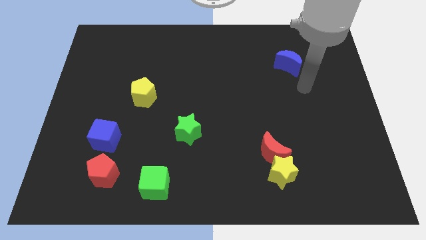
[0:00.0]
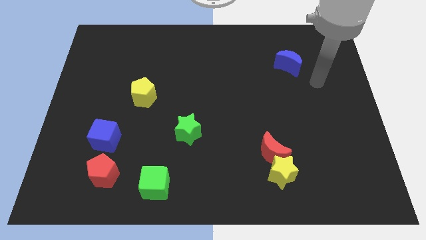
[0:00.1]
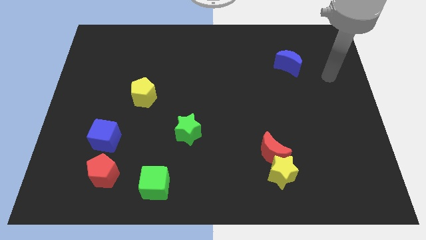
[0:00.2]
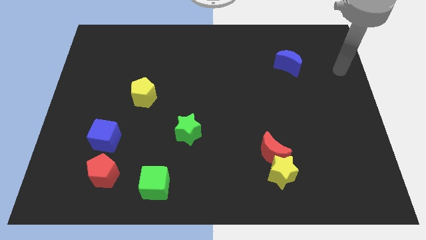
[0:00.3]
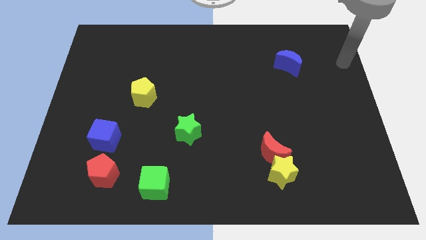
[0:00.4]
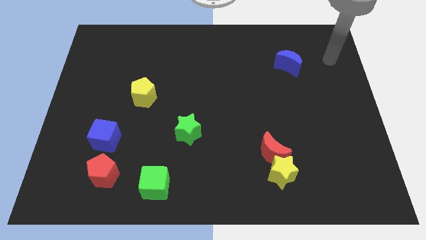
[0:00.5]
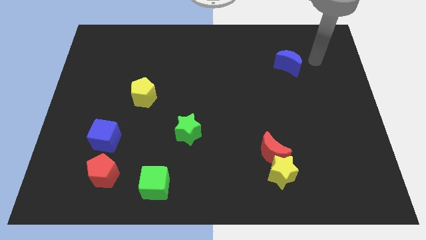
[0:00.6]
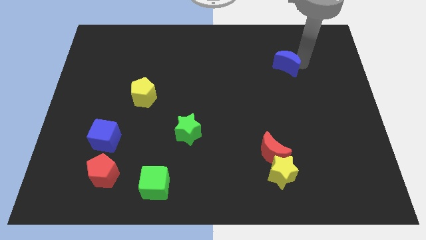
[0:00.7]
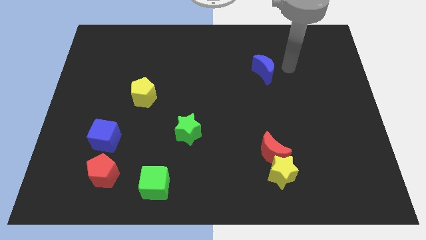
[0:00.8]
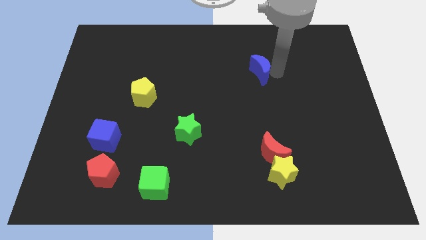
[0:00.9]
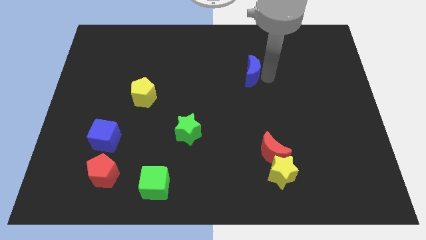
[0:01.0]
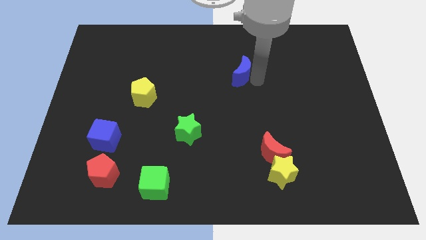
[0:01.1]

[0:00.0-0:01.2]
drag the blue crescent diagonally on the top right side of the green star

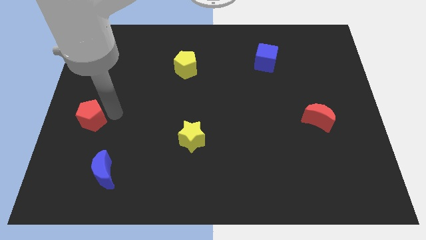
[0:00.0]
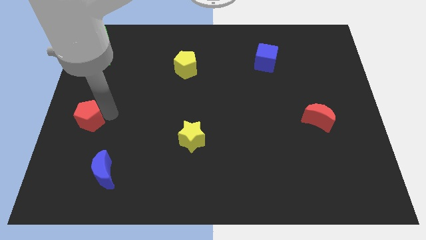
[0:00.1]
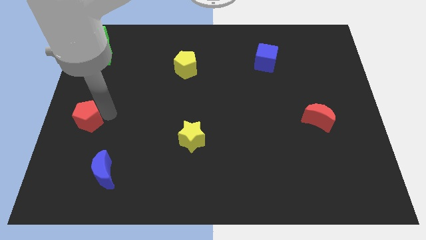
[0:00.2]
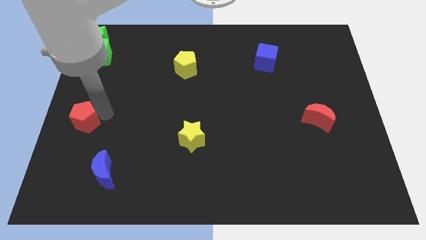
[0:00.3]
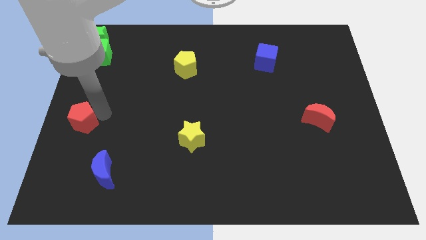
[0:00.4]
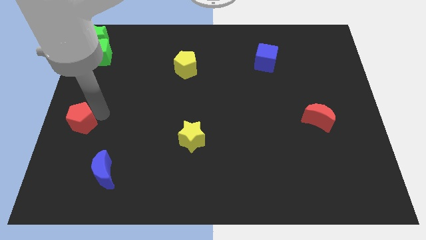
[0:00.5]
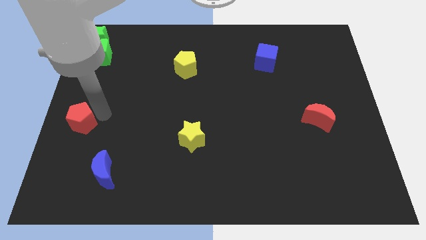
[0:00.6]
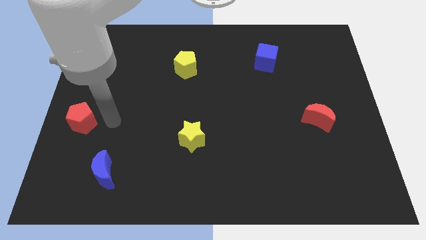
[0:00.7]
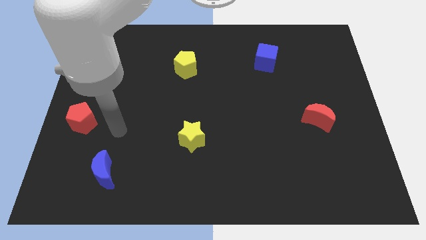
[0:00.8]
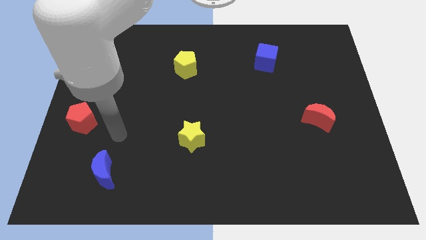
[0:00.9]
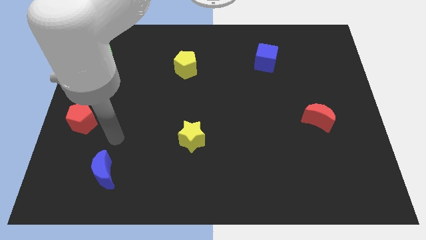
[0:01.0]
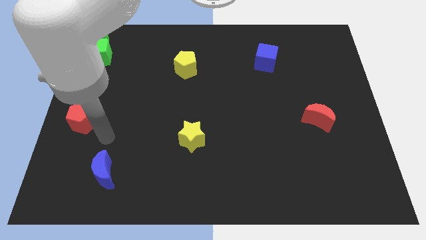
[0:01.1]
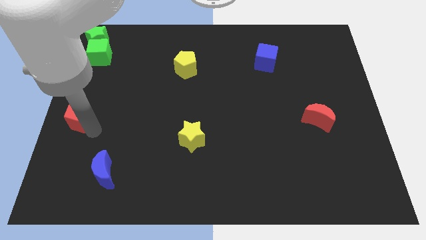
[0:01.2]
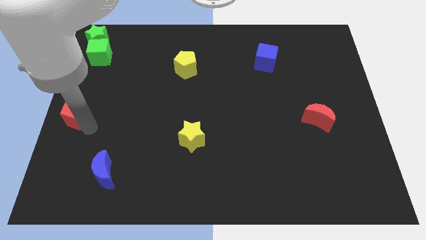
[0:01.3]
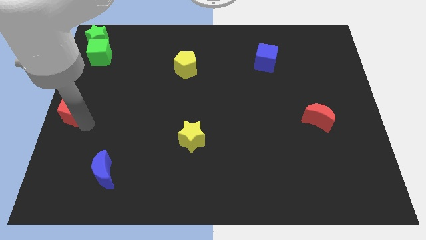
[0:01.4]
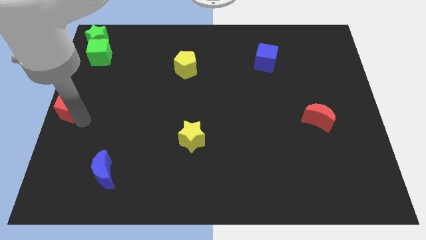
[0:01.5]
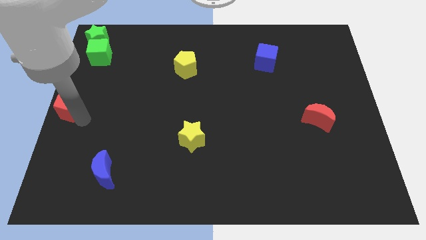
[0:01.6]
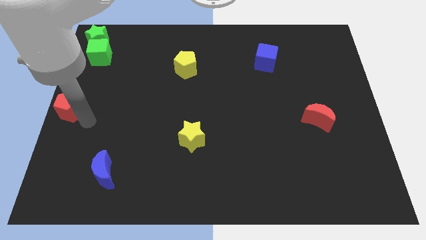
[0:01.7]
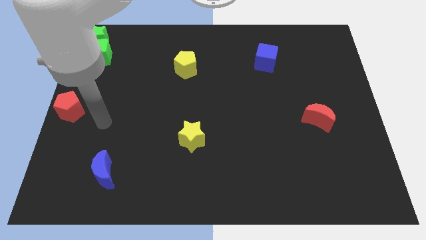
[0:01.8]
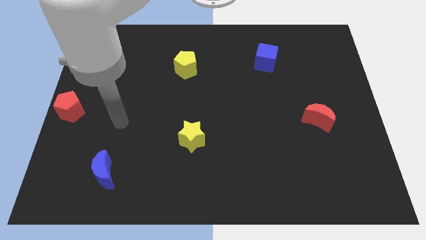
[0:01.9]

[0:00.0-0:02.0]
push the red pentagon towards the left corner of the board

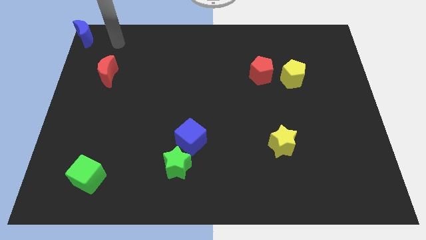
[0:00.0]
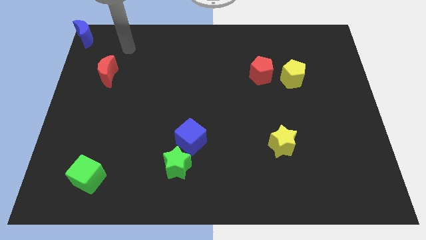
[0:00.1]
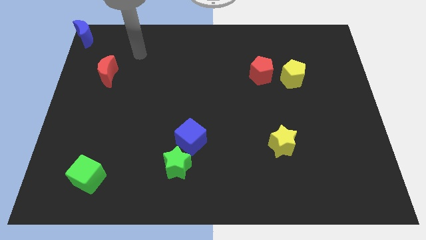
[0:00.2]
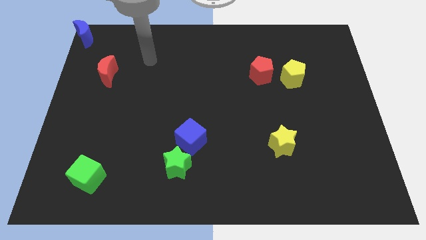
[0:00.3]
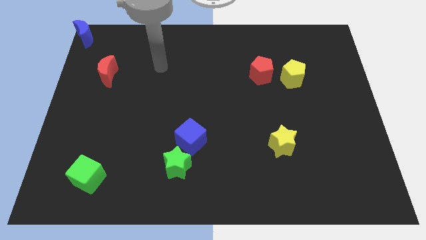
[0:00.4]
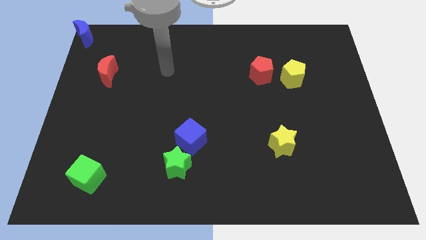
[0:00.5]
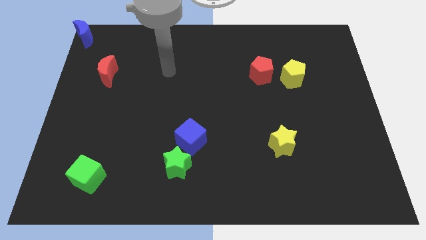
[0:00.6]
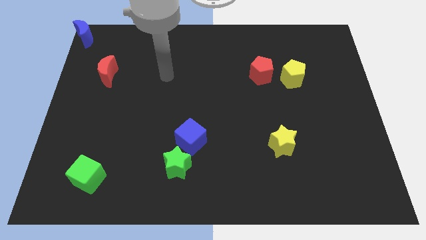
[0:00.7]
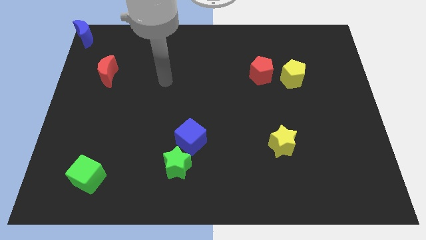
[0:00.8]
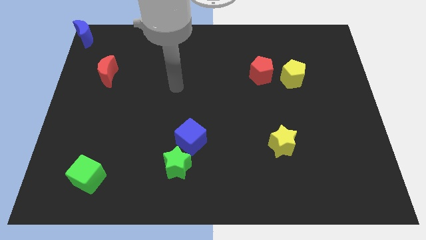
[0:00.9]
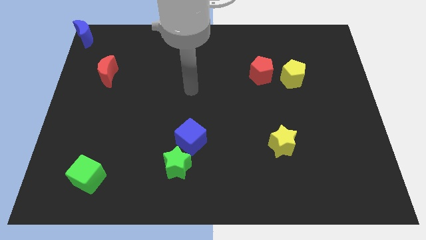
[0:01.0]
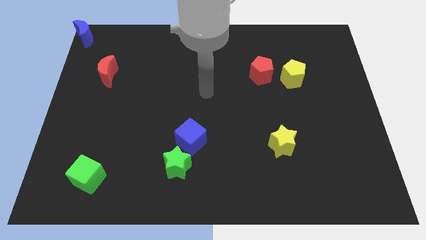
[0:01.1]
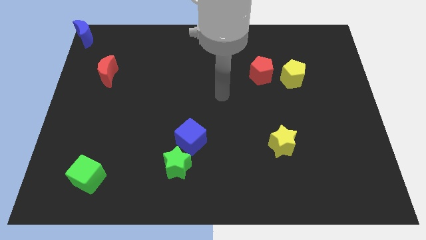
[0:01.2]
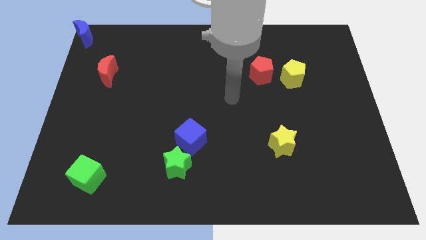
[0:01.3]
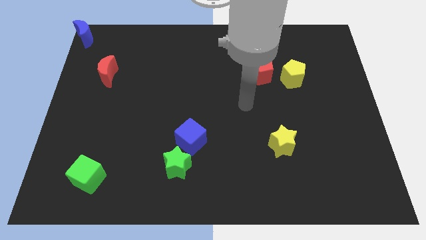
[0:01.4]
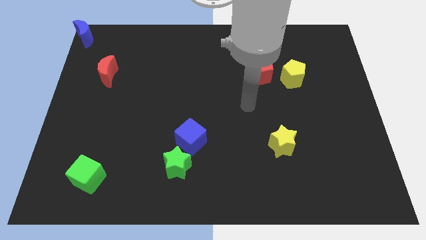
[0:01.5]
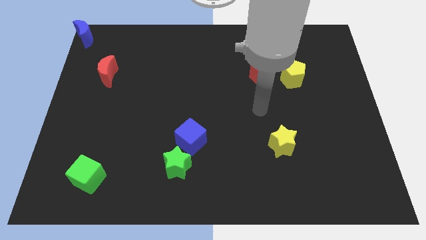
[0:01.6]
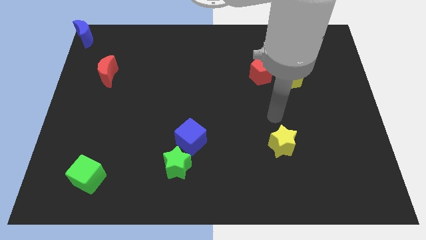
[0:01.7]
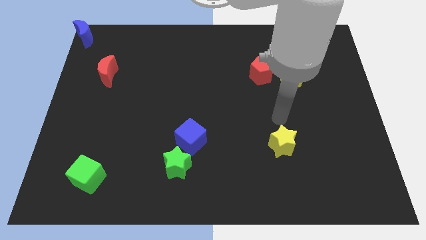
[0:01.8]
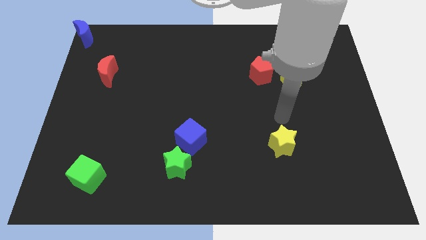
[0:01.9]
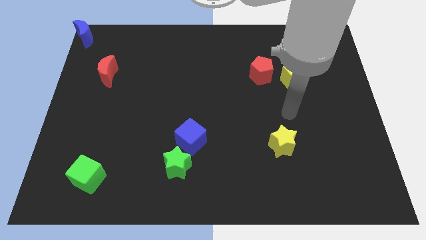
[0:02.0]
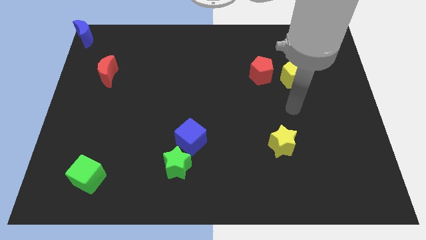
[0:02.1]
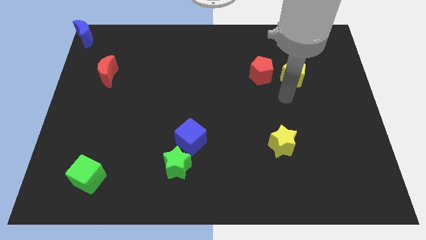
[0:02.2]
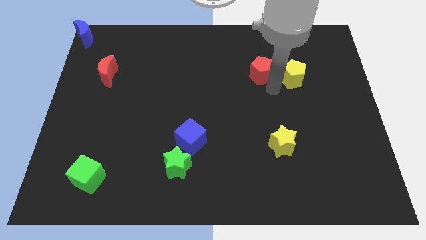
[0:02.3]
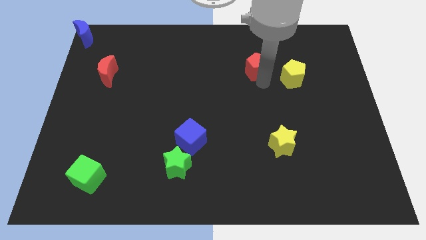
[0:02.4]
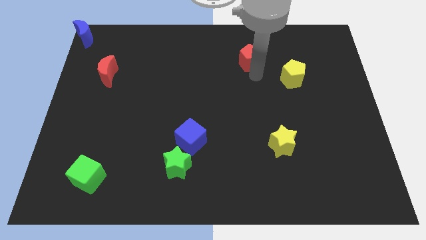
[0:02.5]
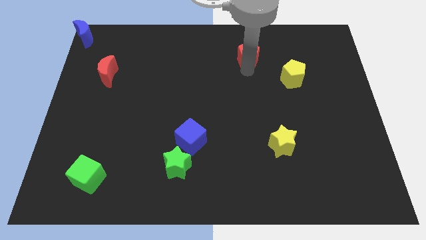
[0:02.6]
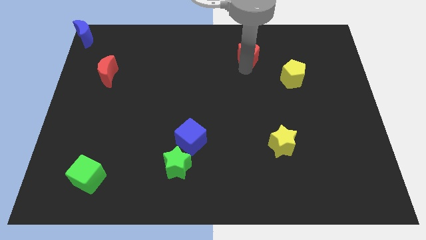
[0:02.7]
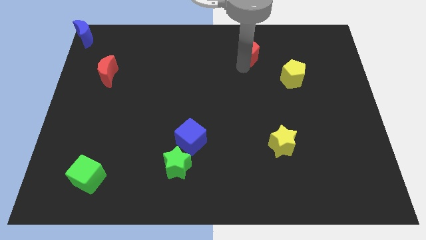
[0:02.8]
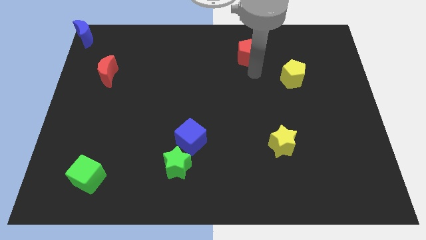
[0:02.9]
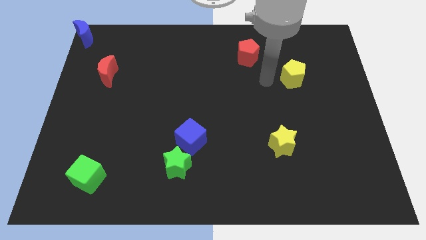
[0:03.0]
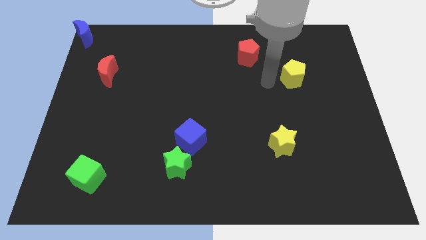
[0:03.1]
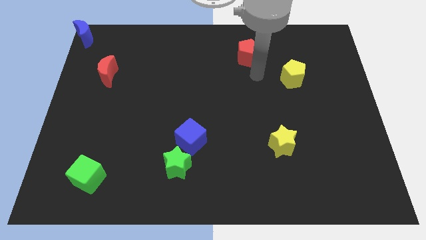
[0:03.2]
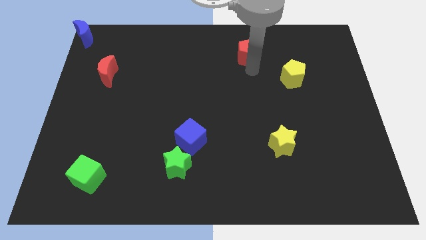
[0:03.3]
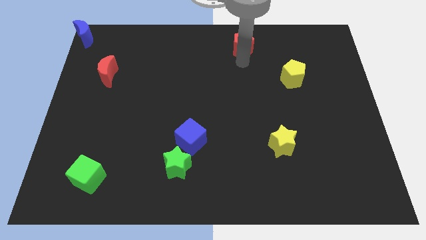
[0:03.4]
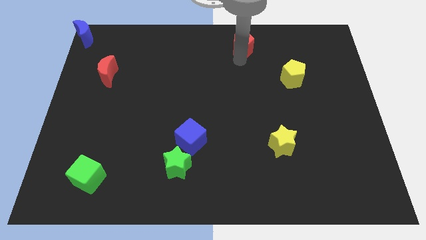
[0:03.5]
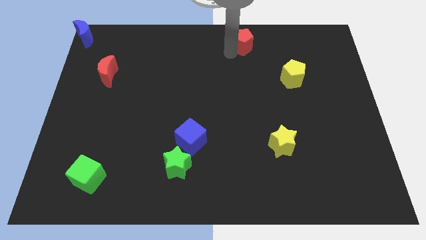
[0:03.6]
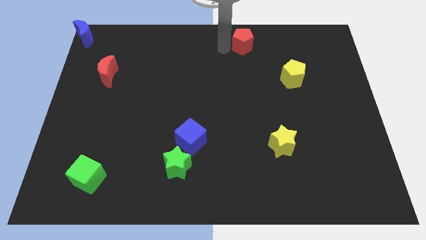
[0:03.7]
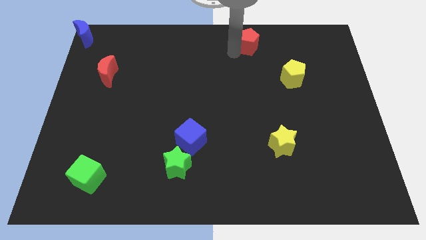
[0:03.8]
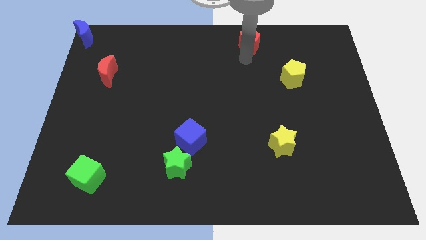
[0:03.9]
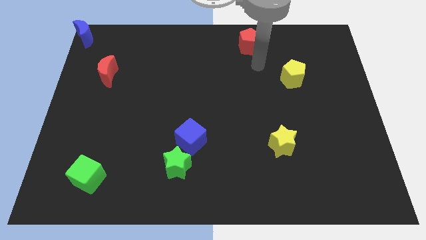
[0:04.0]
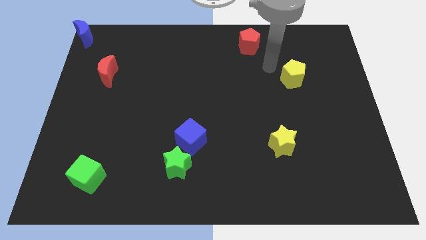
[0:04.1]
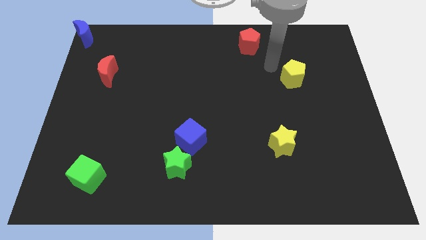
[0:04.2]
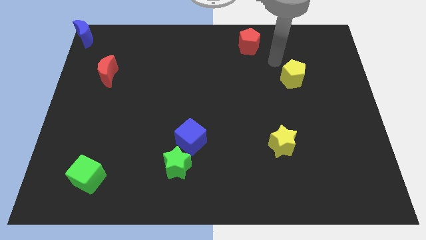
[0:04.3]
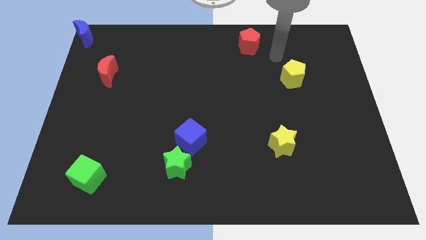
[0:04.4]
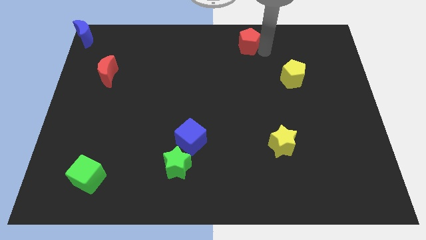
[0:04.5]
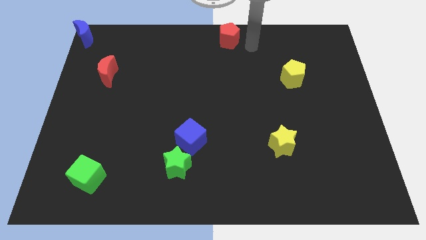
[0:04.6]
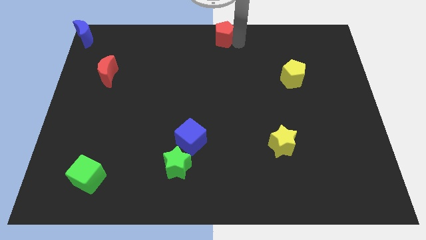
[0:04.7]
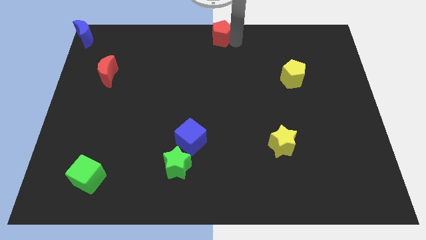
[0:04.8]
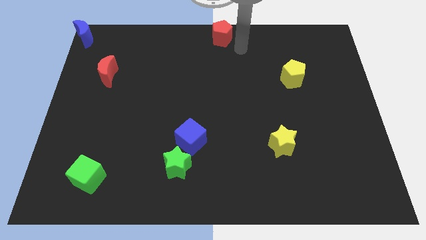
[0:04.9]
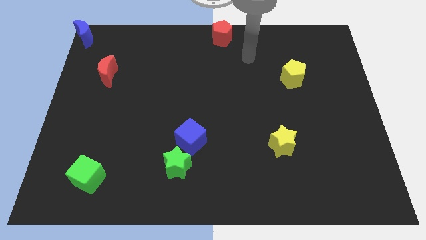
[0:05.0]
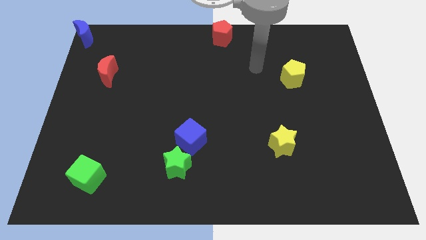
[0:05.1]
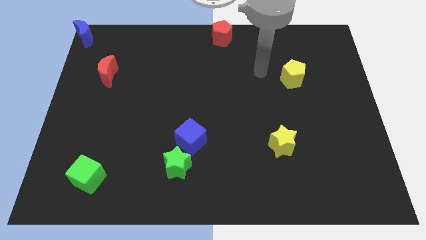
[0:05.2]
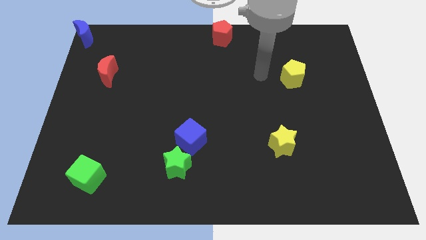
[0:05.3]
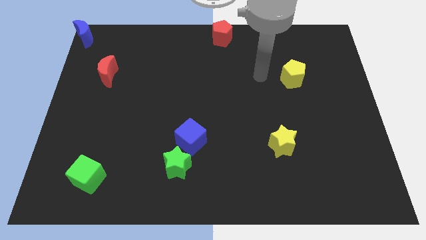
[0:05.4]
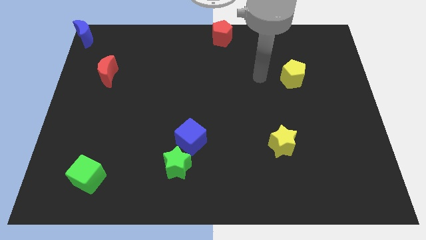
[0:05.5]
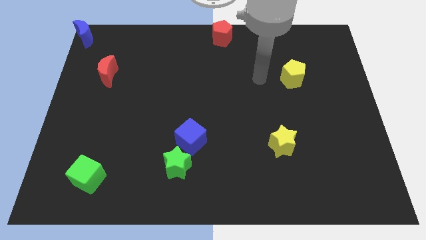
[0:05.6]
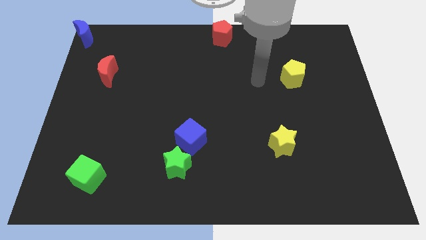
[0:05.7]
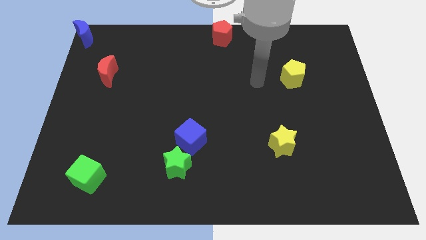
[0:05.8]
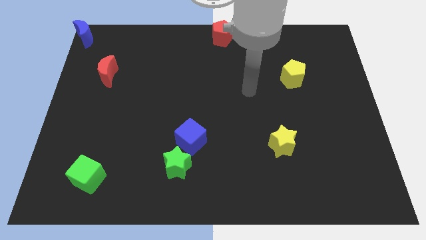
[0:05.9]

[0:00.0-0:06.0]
move the red pentagon towards top center
